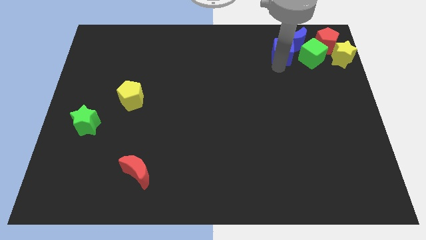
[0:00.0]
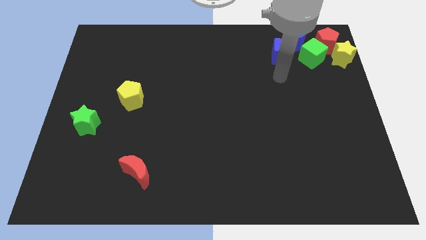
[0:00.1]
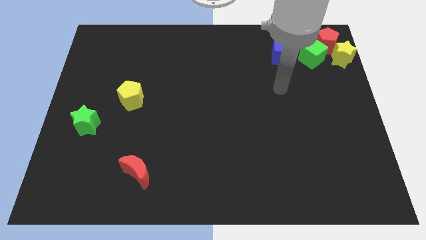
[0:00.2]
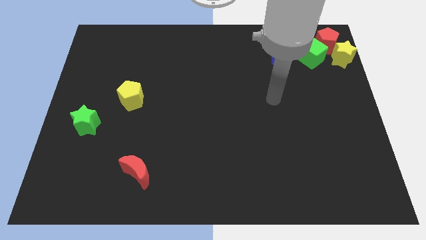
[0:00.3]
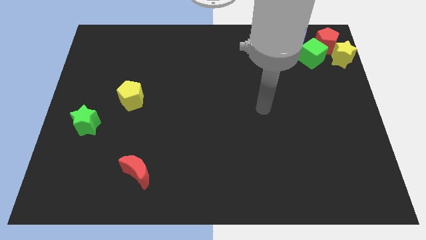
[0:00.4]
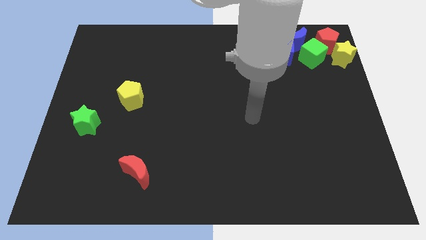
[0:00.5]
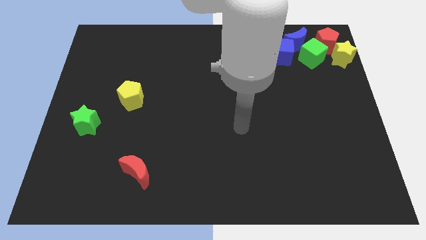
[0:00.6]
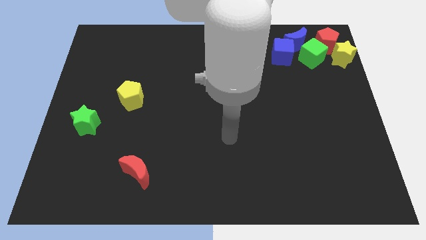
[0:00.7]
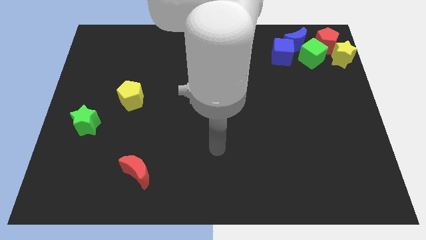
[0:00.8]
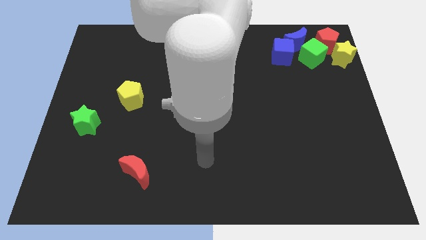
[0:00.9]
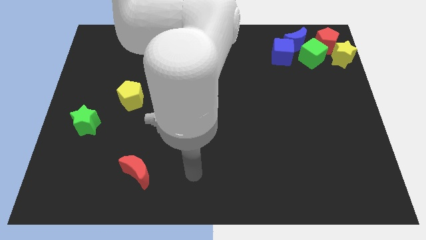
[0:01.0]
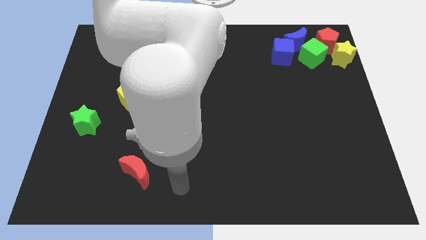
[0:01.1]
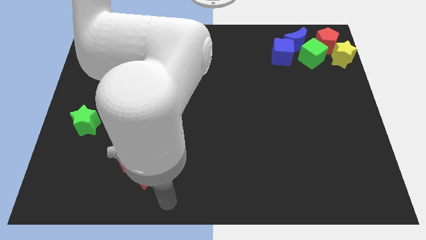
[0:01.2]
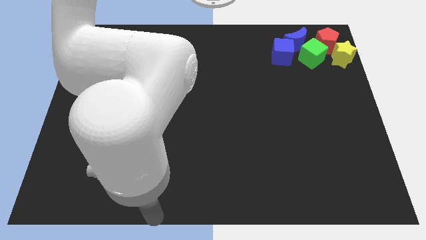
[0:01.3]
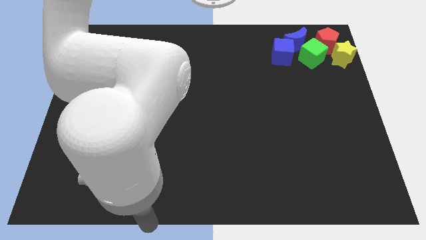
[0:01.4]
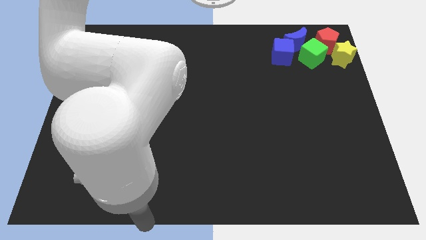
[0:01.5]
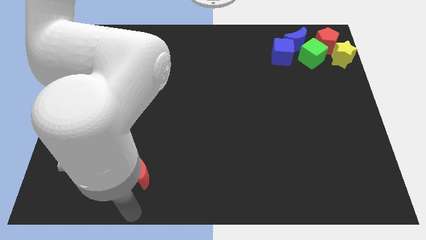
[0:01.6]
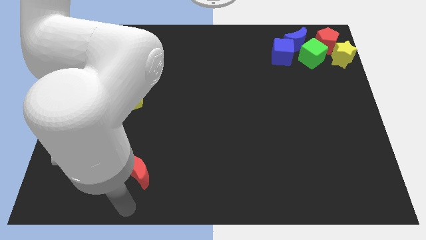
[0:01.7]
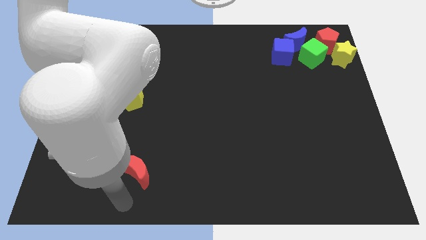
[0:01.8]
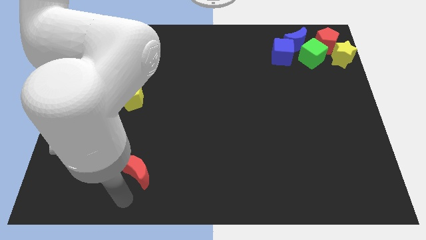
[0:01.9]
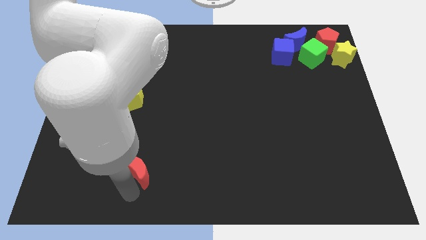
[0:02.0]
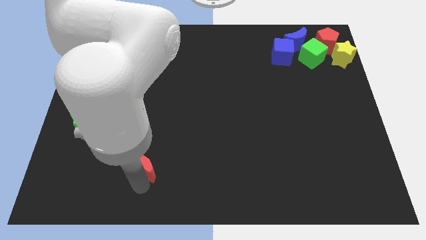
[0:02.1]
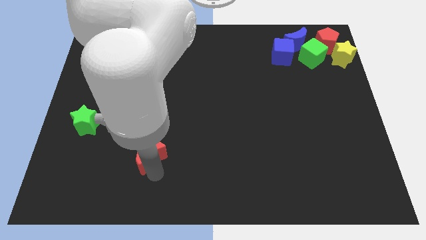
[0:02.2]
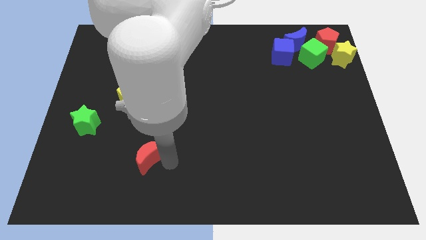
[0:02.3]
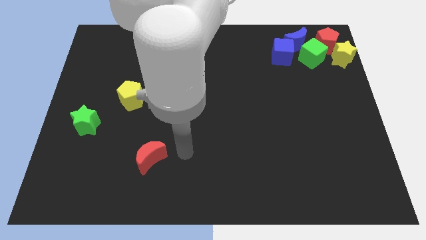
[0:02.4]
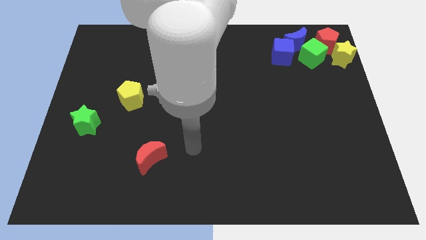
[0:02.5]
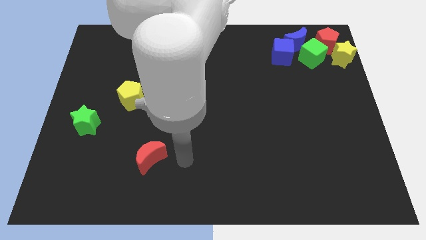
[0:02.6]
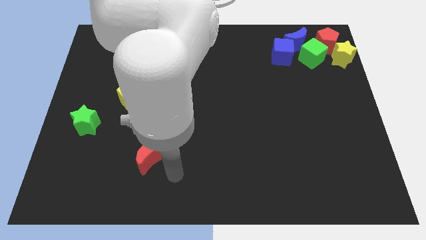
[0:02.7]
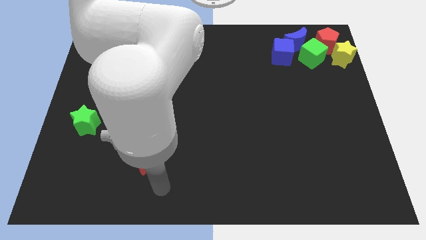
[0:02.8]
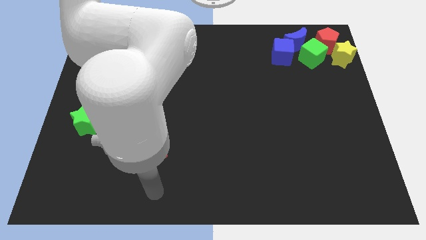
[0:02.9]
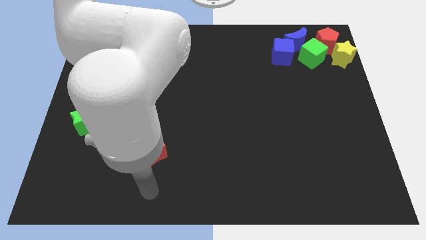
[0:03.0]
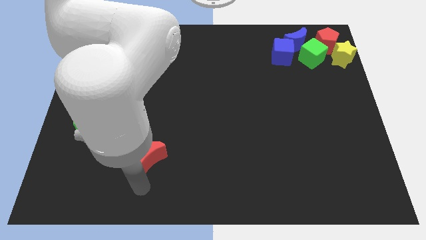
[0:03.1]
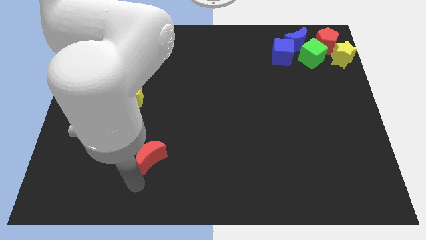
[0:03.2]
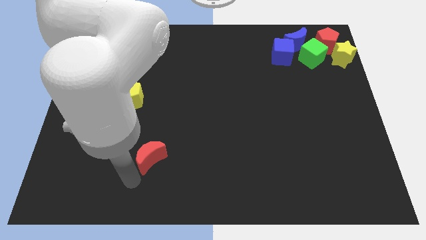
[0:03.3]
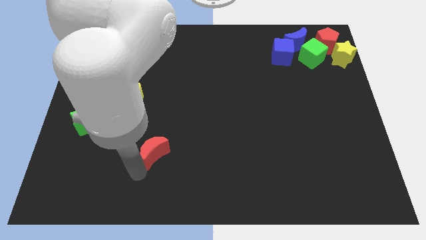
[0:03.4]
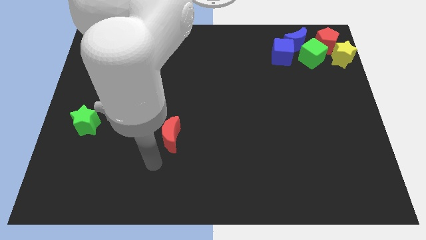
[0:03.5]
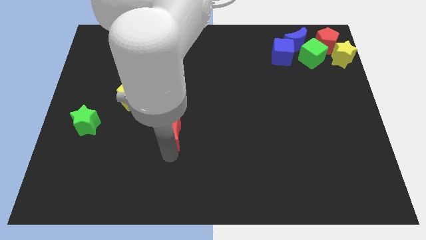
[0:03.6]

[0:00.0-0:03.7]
push the red moon towards the center of the board

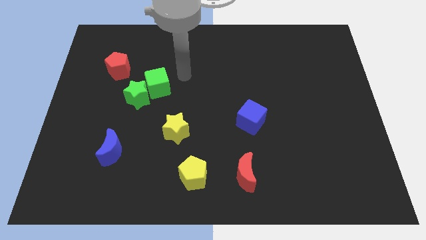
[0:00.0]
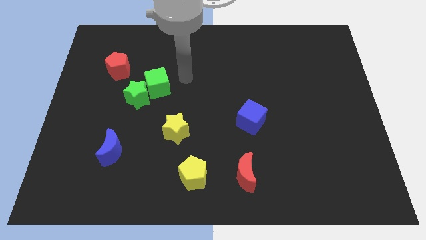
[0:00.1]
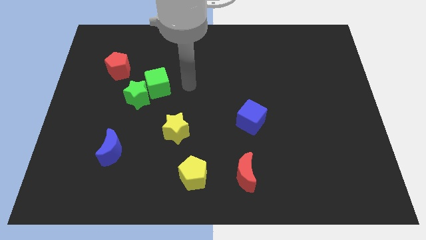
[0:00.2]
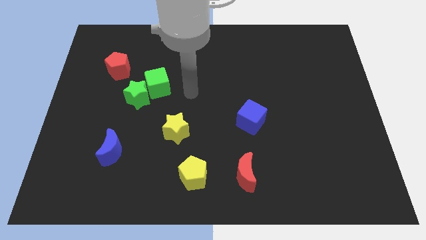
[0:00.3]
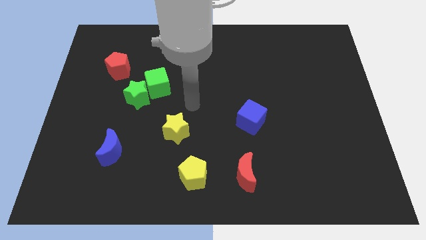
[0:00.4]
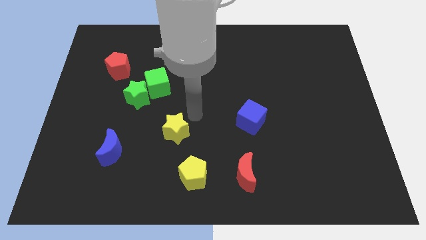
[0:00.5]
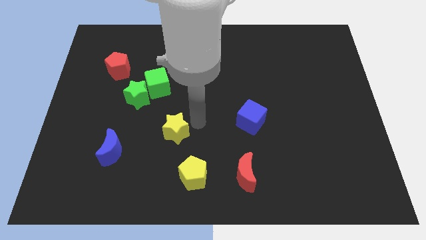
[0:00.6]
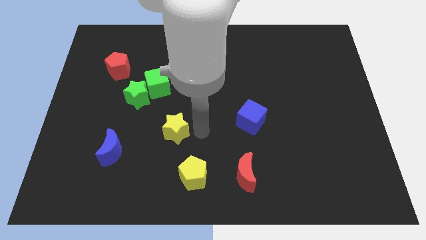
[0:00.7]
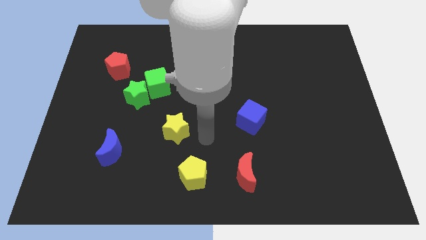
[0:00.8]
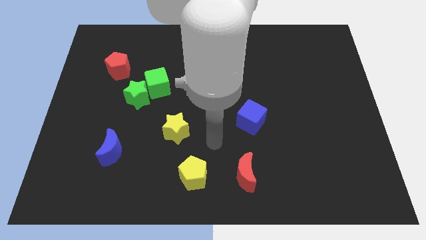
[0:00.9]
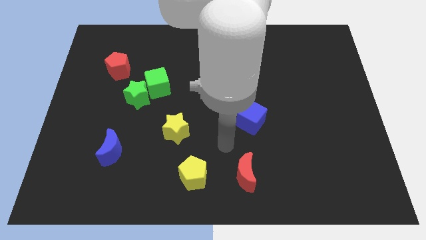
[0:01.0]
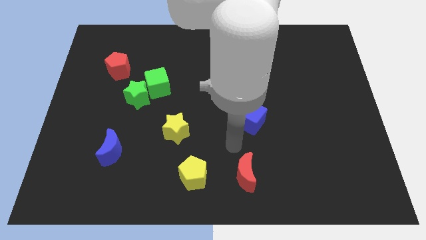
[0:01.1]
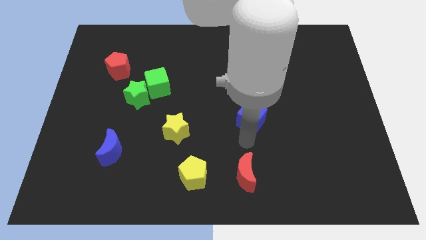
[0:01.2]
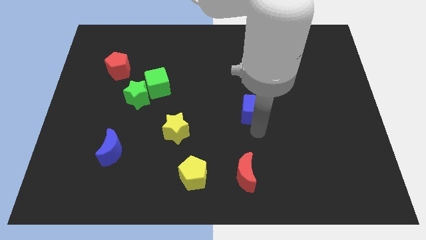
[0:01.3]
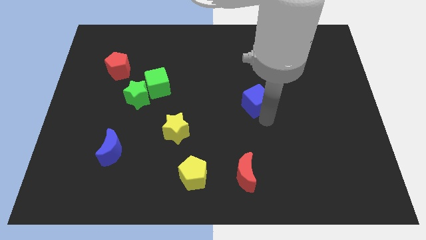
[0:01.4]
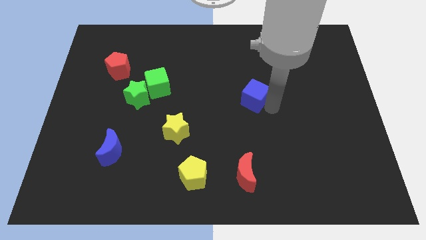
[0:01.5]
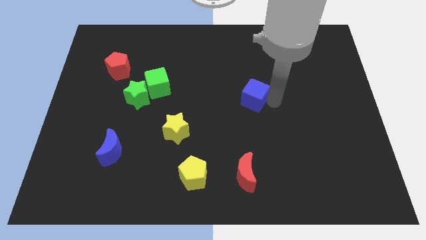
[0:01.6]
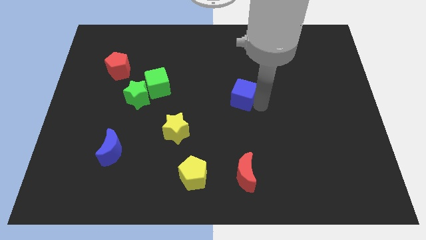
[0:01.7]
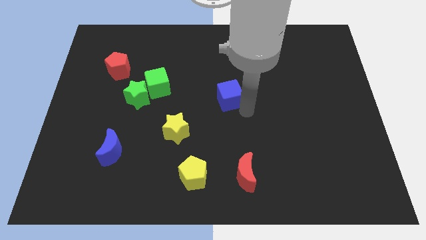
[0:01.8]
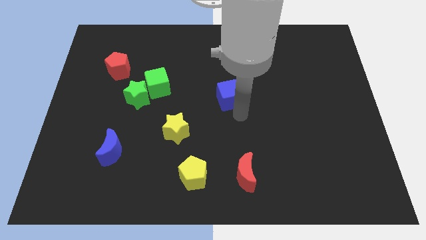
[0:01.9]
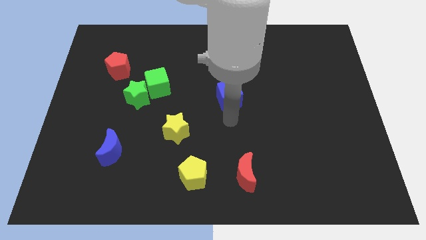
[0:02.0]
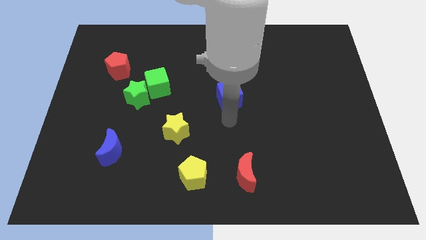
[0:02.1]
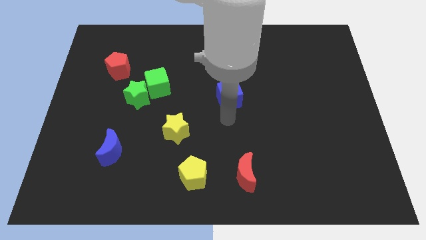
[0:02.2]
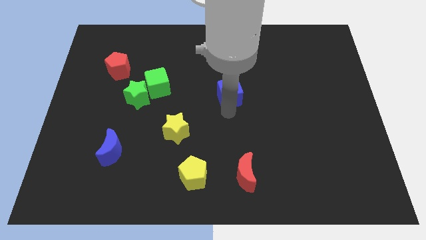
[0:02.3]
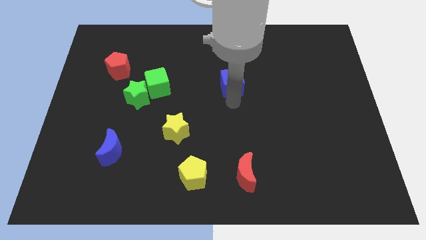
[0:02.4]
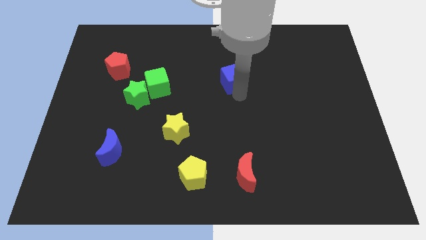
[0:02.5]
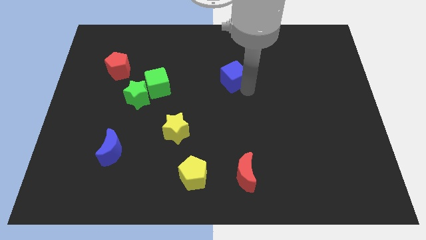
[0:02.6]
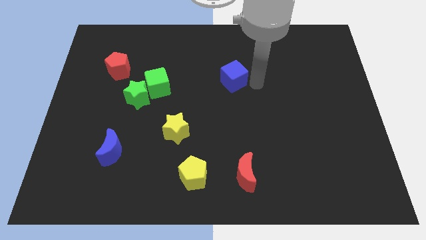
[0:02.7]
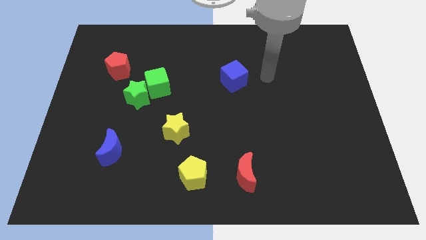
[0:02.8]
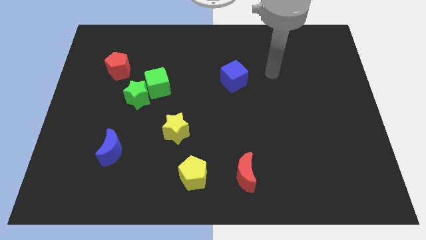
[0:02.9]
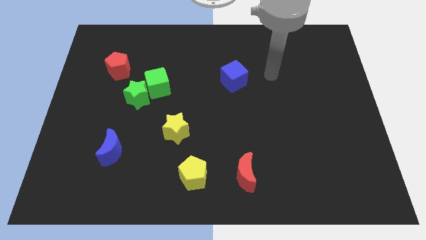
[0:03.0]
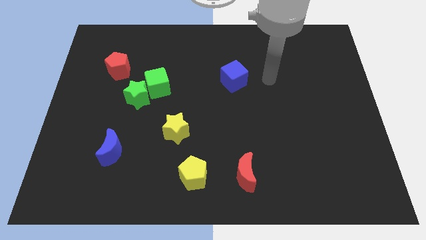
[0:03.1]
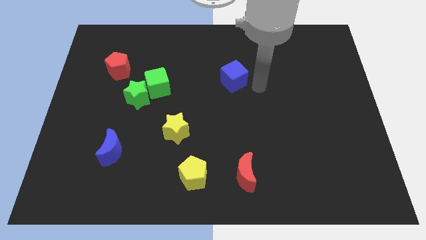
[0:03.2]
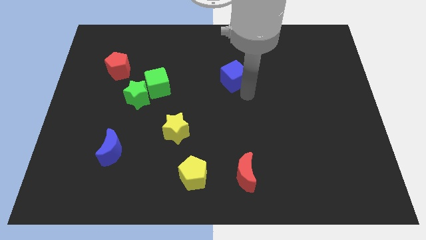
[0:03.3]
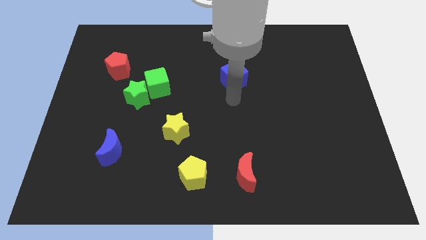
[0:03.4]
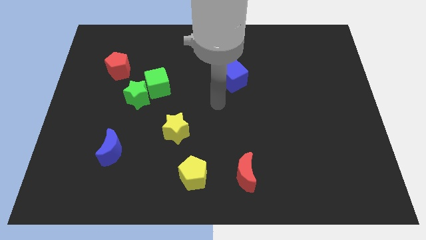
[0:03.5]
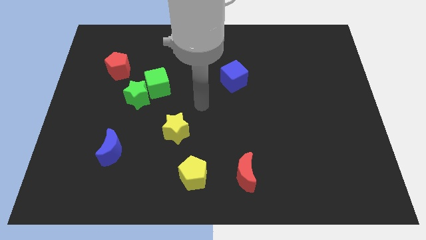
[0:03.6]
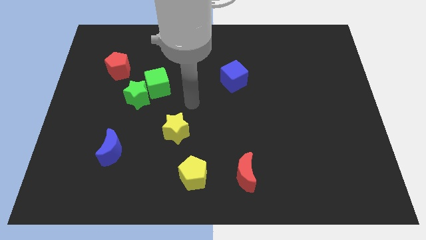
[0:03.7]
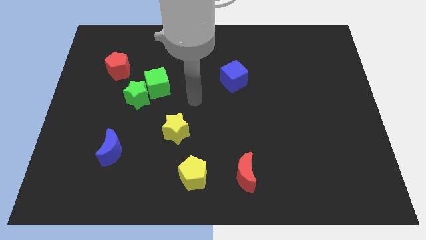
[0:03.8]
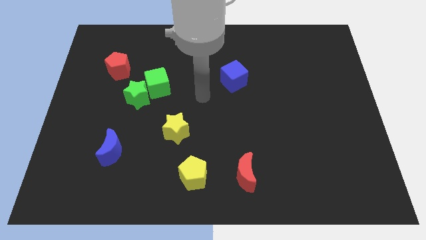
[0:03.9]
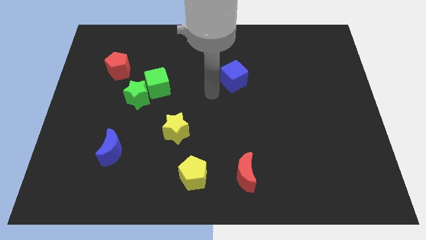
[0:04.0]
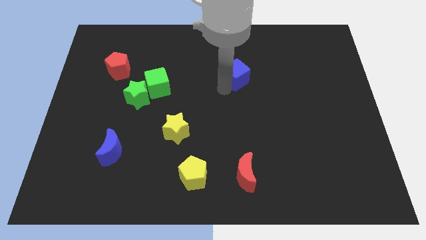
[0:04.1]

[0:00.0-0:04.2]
place the blue cube above the red moon

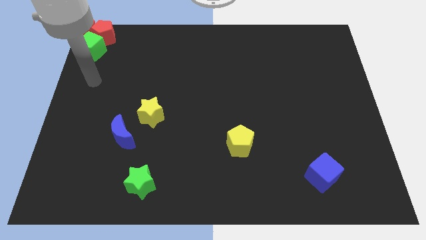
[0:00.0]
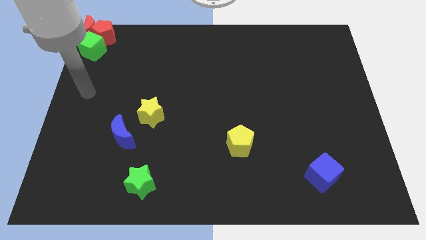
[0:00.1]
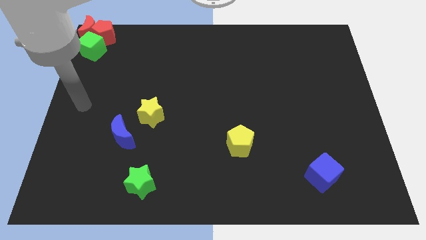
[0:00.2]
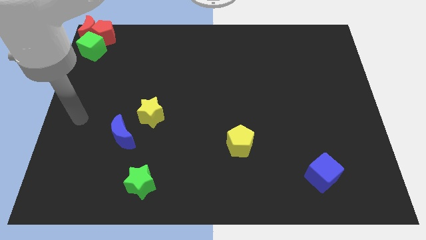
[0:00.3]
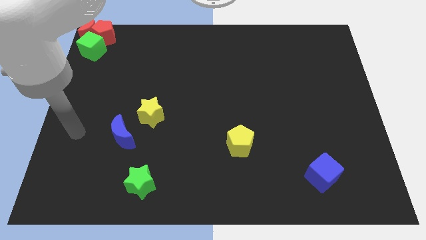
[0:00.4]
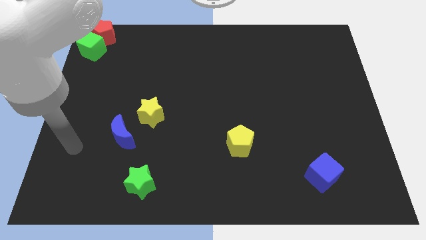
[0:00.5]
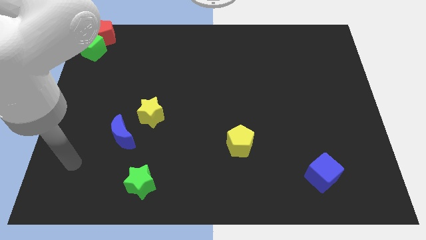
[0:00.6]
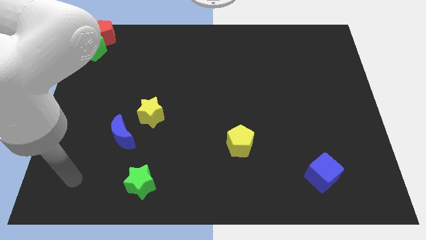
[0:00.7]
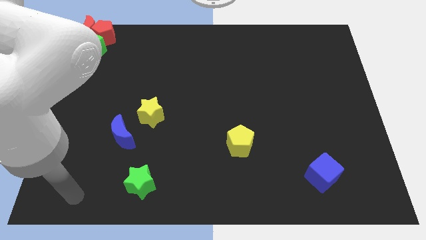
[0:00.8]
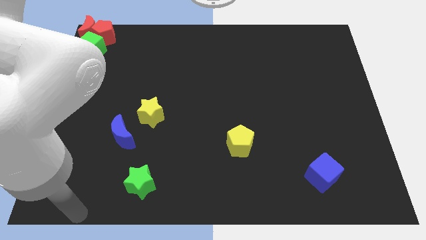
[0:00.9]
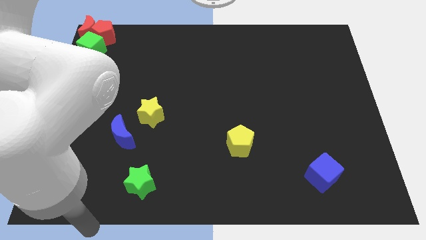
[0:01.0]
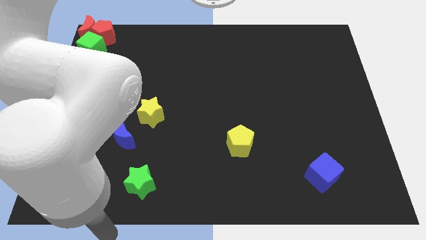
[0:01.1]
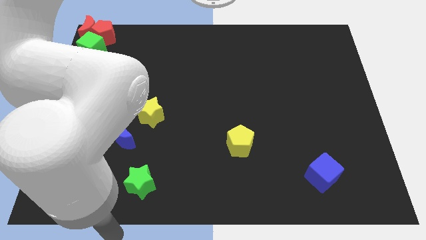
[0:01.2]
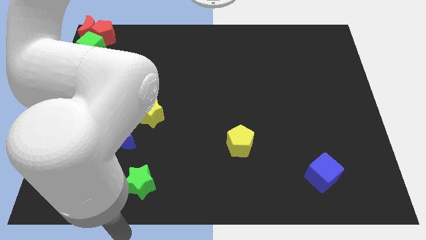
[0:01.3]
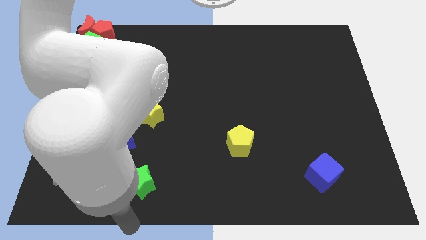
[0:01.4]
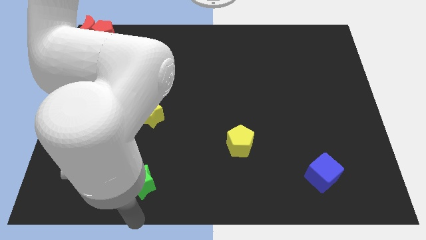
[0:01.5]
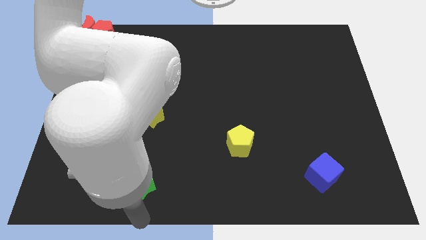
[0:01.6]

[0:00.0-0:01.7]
move your arm below the green star
